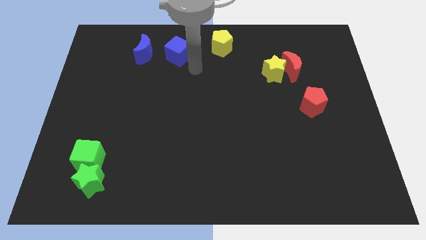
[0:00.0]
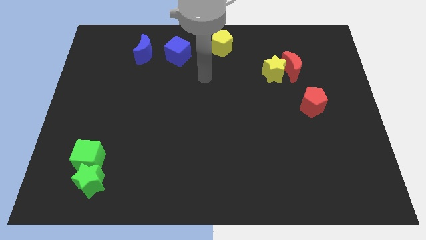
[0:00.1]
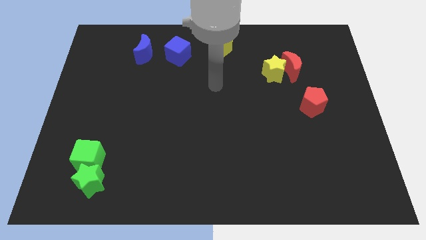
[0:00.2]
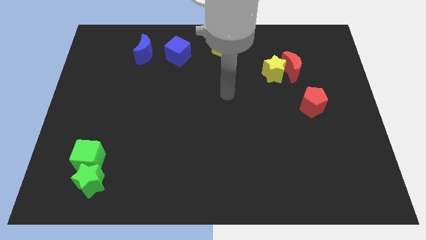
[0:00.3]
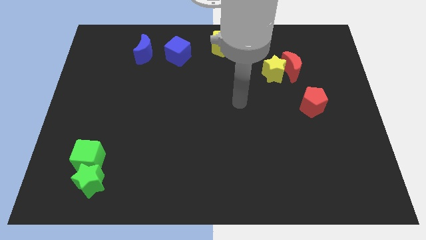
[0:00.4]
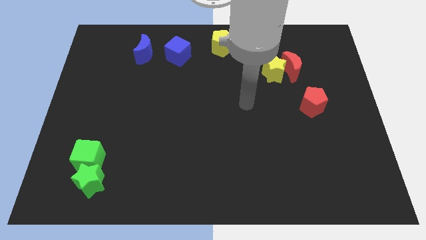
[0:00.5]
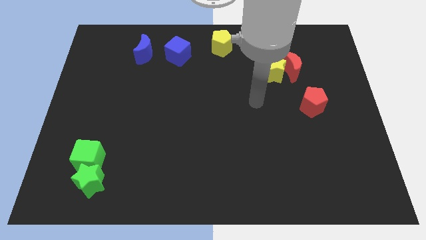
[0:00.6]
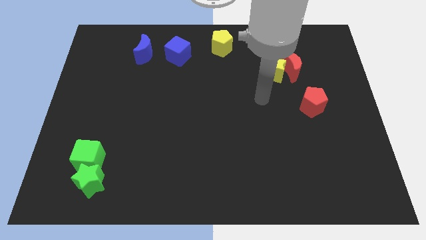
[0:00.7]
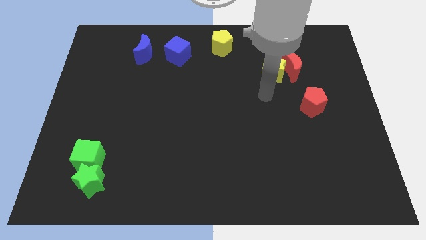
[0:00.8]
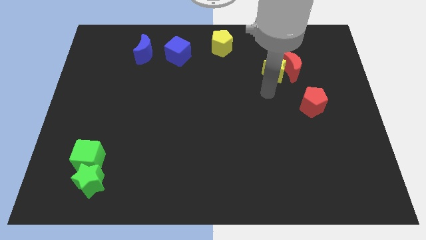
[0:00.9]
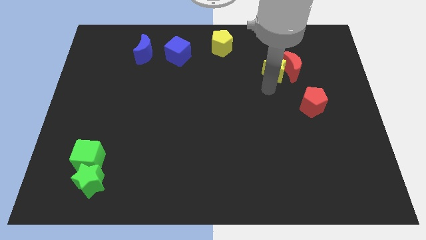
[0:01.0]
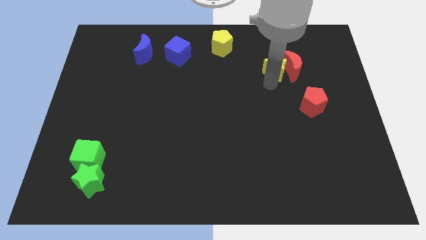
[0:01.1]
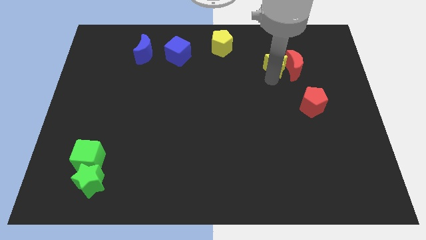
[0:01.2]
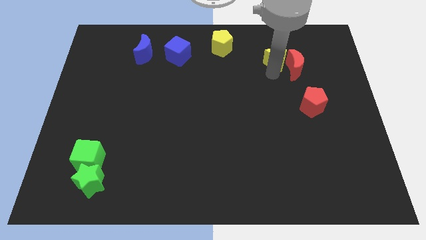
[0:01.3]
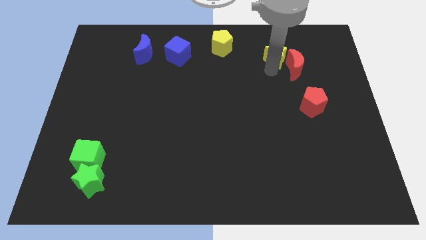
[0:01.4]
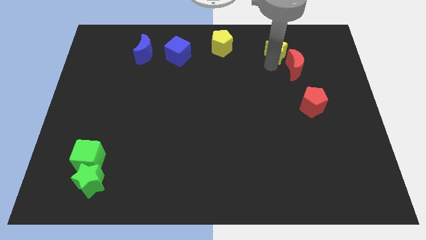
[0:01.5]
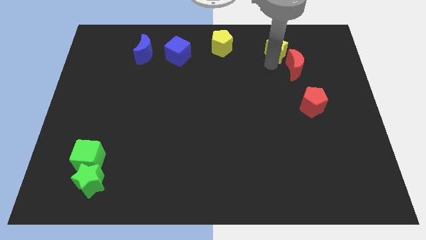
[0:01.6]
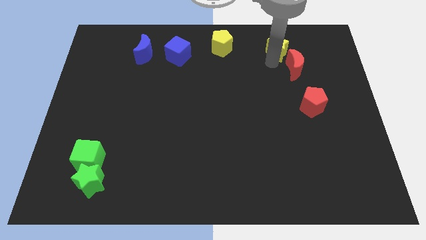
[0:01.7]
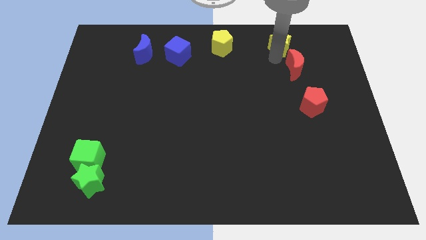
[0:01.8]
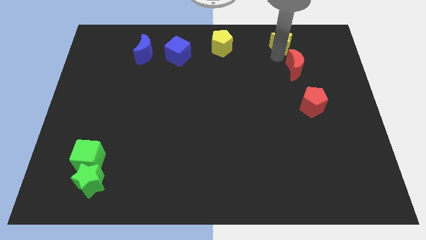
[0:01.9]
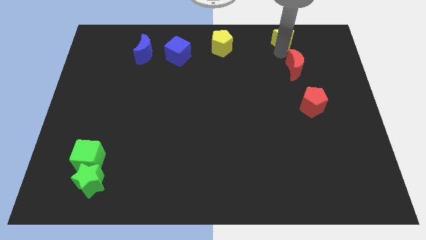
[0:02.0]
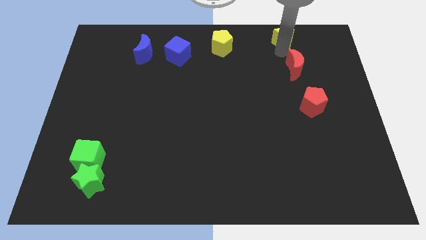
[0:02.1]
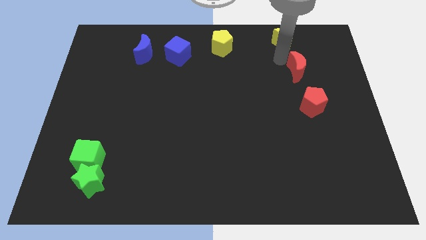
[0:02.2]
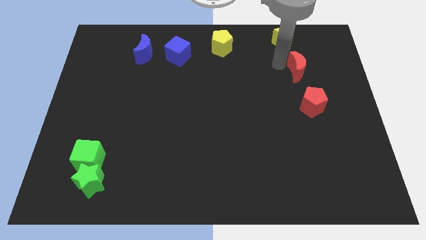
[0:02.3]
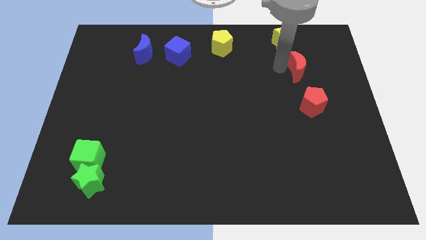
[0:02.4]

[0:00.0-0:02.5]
place the yellow star to the right of the yellow pentagon

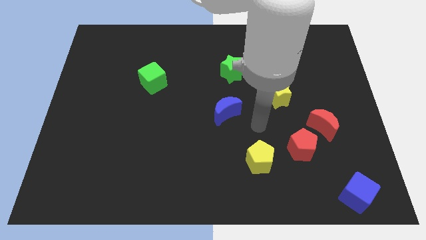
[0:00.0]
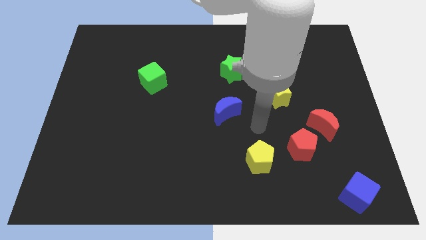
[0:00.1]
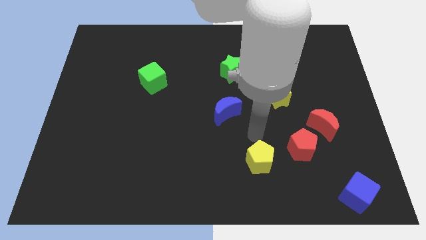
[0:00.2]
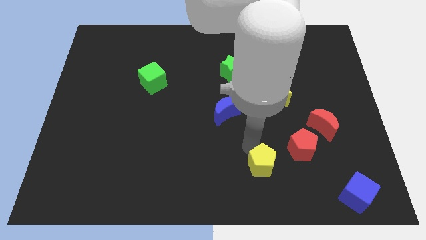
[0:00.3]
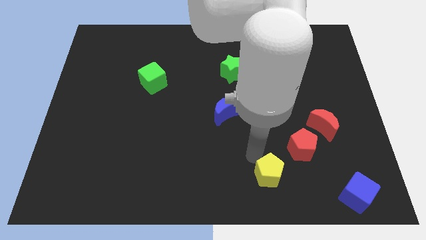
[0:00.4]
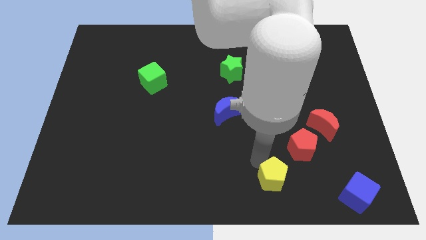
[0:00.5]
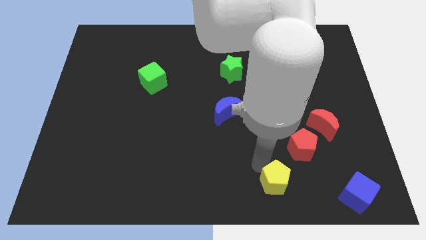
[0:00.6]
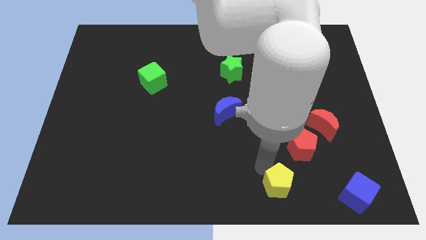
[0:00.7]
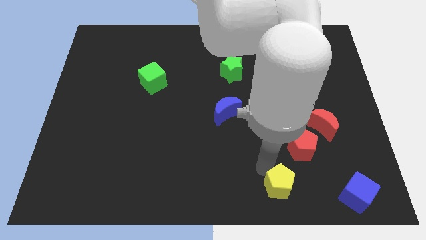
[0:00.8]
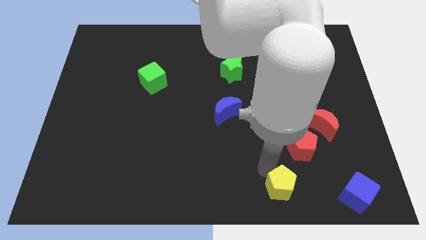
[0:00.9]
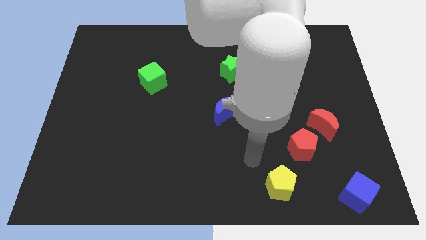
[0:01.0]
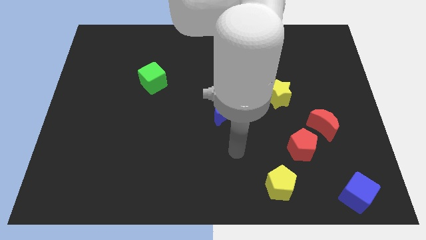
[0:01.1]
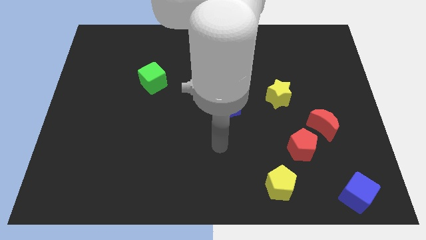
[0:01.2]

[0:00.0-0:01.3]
move the yellow pentagon towards the bottom right

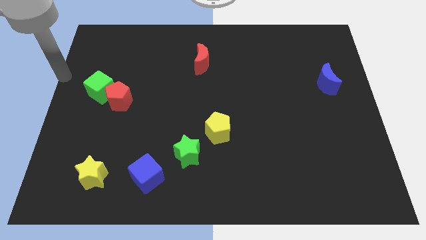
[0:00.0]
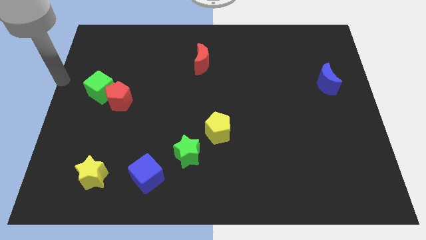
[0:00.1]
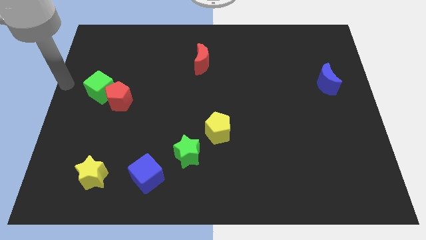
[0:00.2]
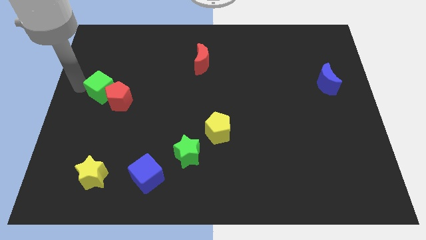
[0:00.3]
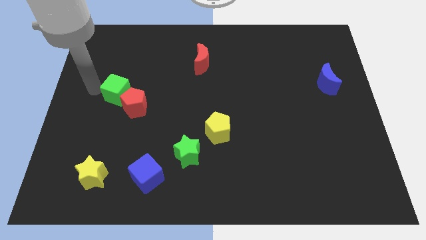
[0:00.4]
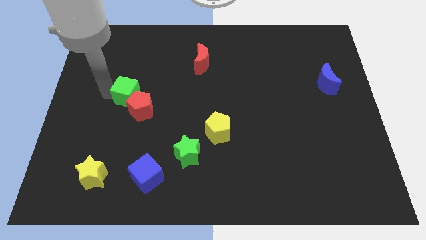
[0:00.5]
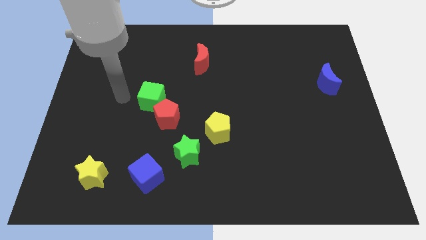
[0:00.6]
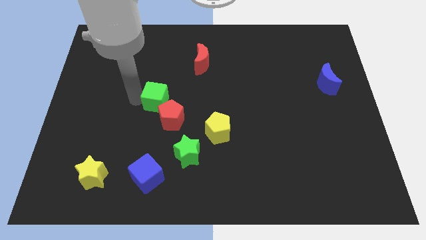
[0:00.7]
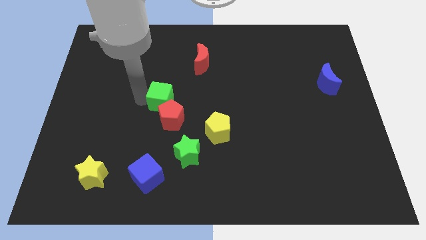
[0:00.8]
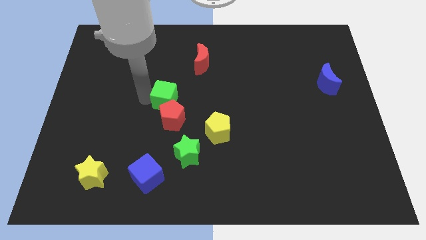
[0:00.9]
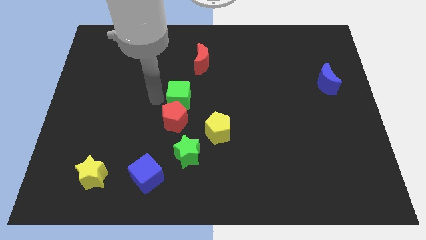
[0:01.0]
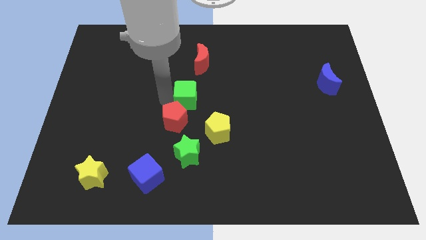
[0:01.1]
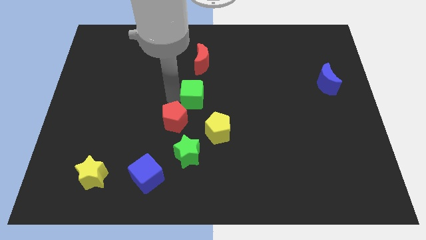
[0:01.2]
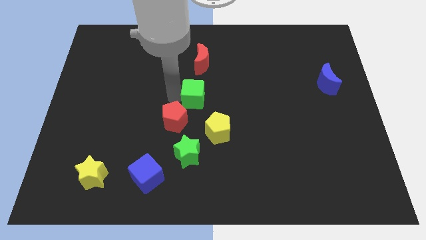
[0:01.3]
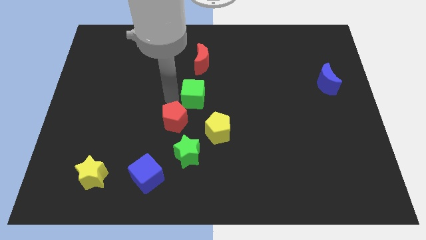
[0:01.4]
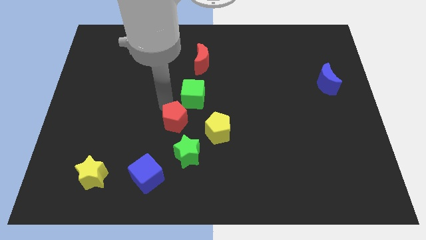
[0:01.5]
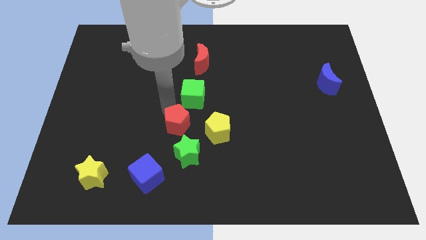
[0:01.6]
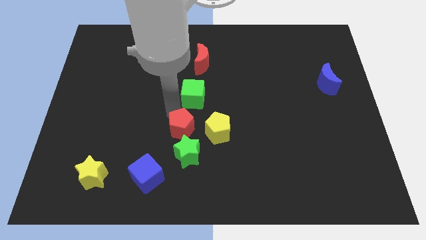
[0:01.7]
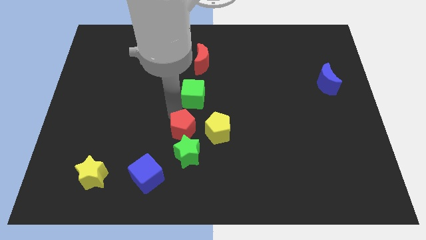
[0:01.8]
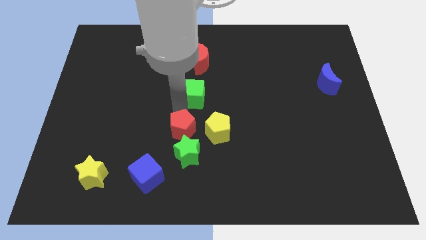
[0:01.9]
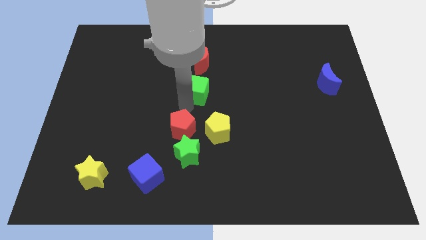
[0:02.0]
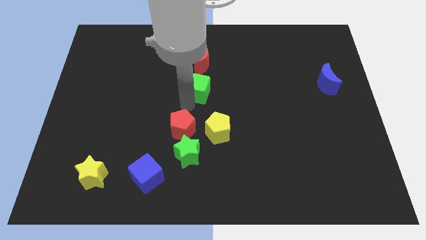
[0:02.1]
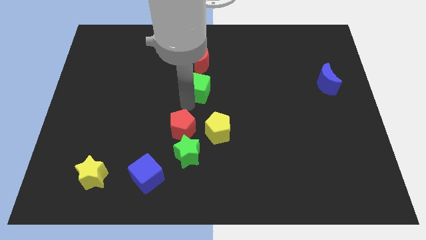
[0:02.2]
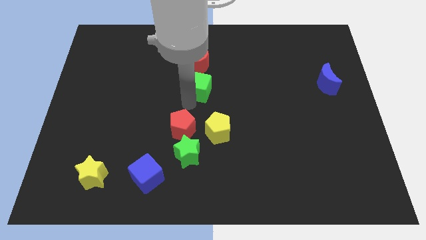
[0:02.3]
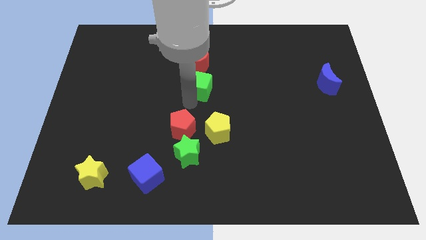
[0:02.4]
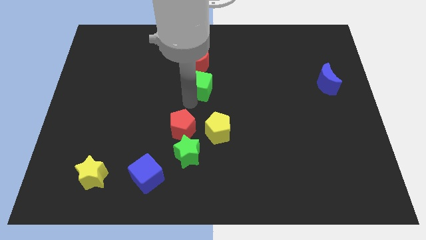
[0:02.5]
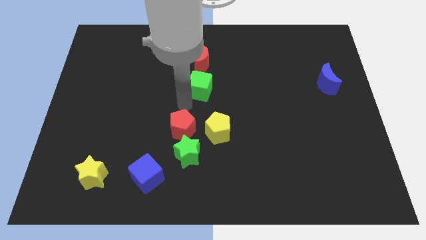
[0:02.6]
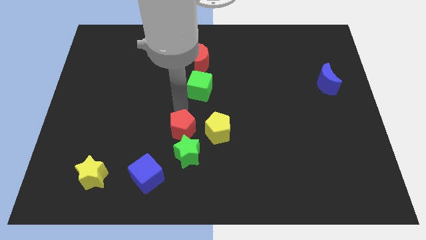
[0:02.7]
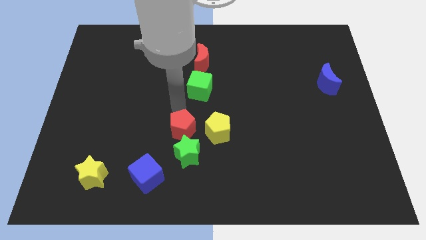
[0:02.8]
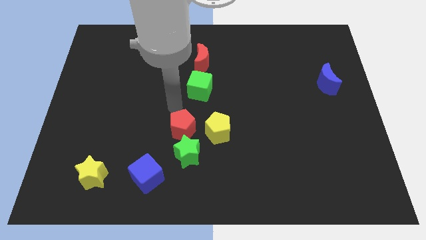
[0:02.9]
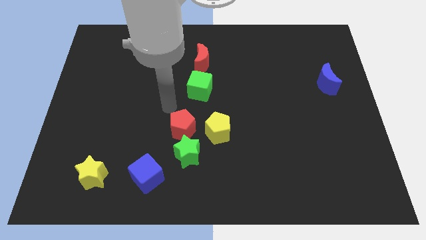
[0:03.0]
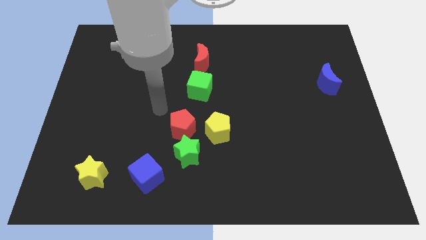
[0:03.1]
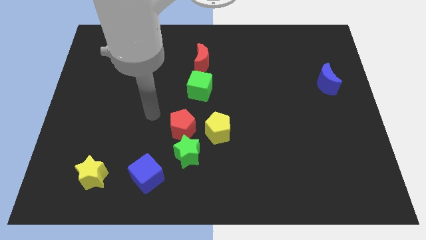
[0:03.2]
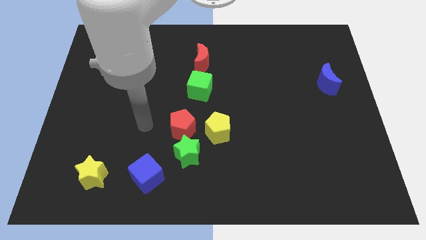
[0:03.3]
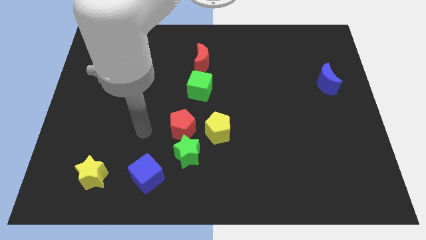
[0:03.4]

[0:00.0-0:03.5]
push the green cube below the red crescent

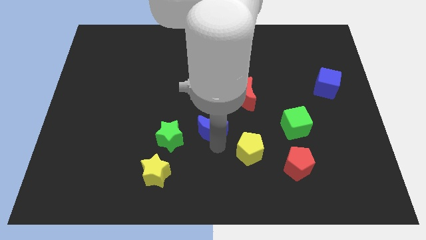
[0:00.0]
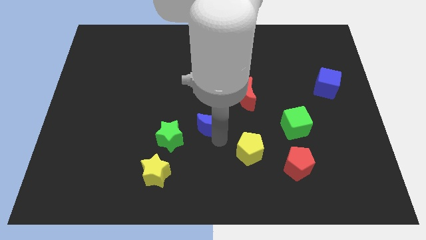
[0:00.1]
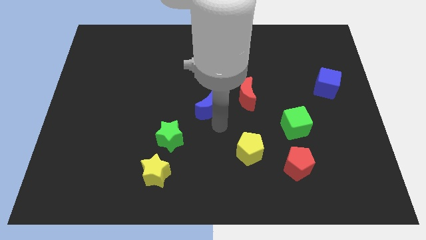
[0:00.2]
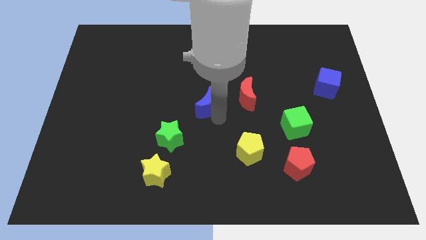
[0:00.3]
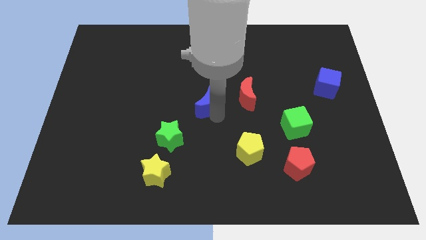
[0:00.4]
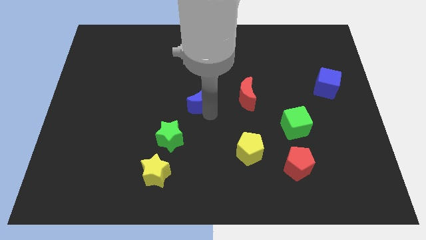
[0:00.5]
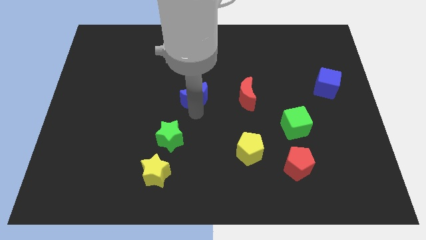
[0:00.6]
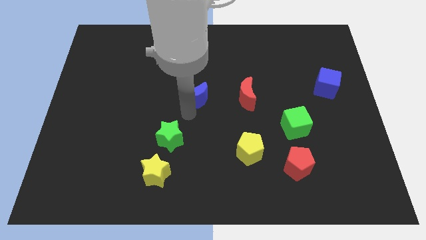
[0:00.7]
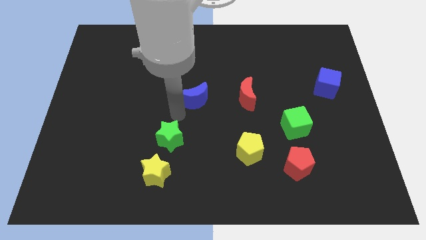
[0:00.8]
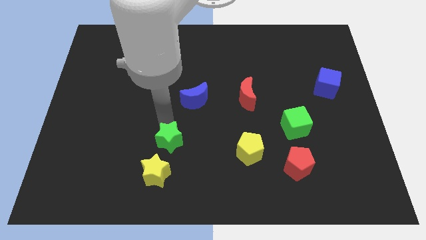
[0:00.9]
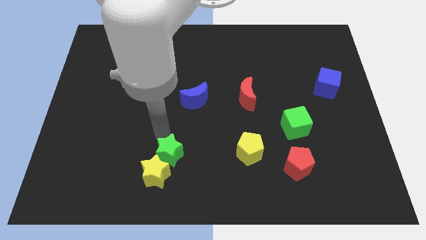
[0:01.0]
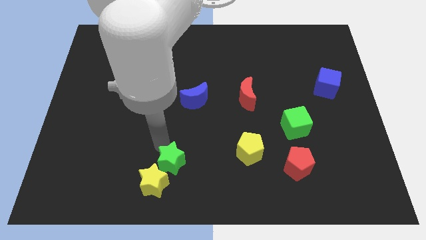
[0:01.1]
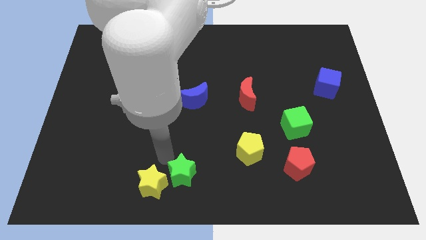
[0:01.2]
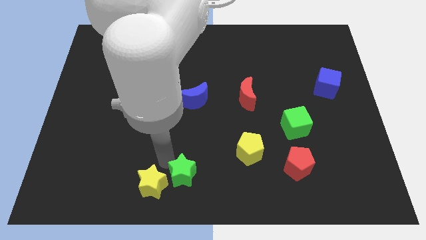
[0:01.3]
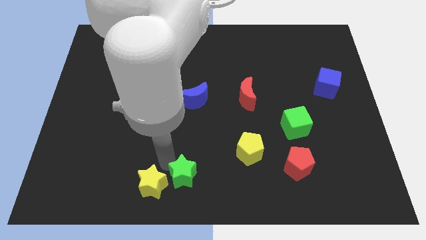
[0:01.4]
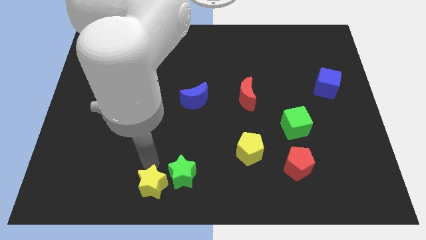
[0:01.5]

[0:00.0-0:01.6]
move the blue crescent towards the top left of the board
